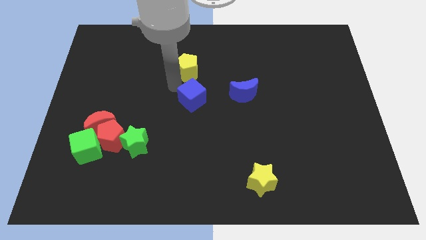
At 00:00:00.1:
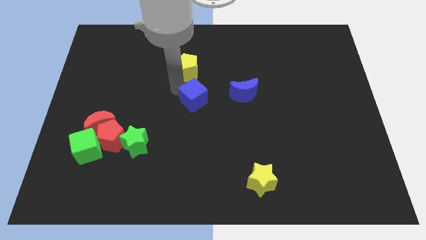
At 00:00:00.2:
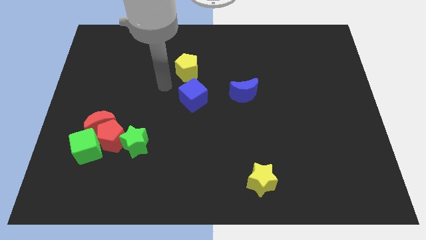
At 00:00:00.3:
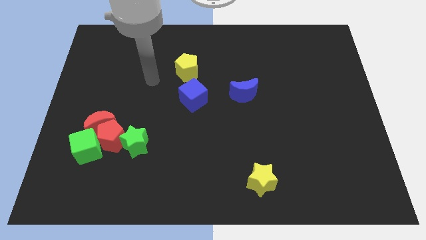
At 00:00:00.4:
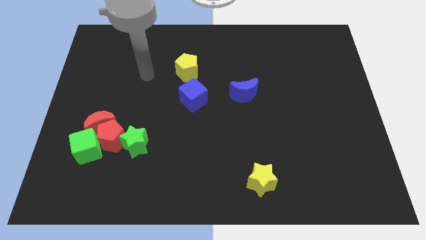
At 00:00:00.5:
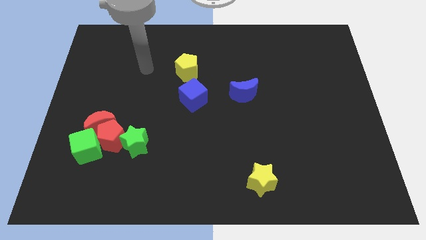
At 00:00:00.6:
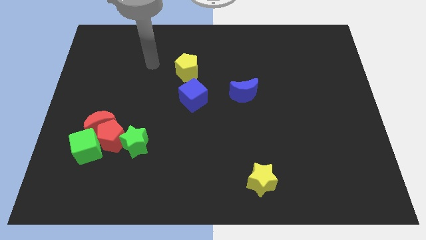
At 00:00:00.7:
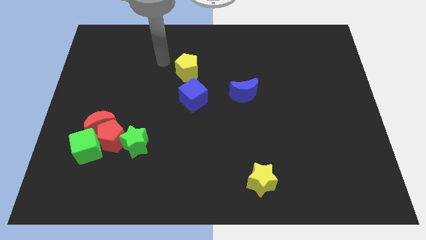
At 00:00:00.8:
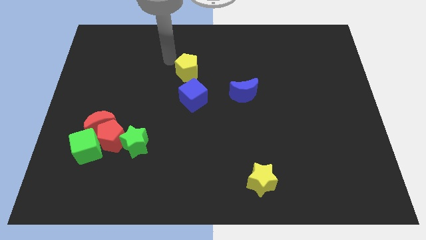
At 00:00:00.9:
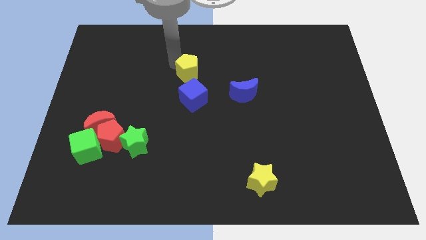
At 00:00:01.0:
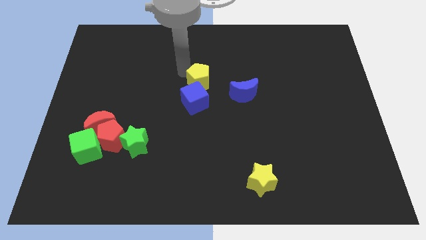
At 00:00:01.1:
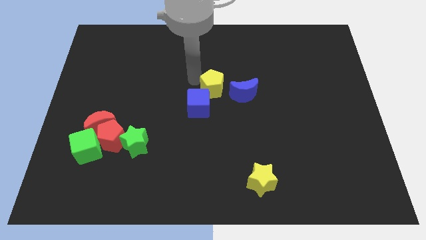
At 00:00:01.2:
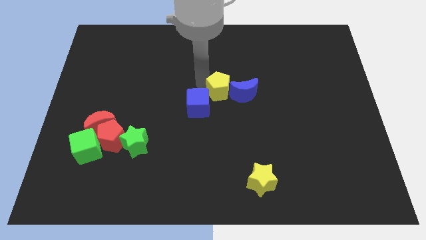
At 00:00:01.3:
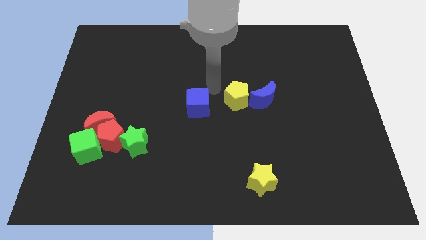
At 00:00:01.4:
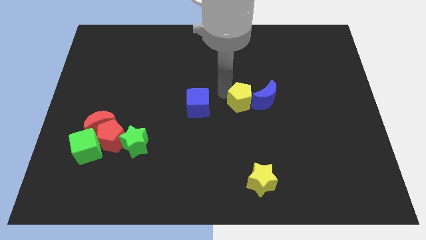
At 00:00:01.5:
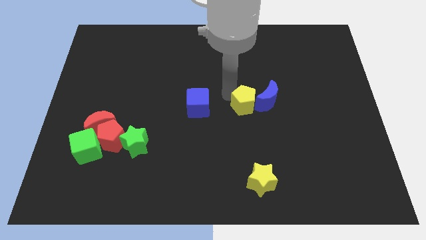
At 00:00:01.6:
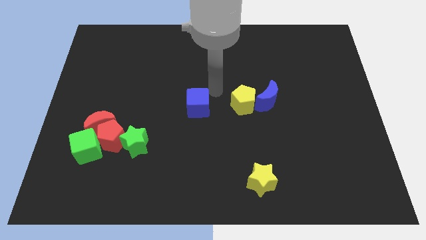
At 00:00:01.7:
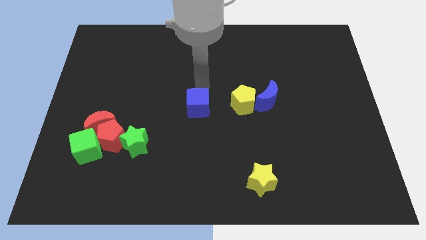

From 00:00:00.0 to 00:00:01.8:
place the yellow pentagon in between blue cube and blue crescent

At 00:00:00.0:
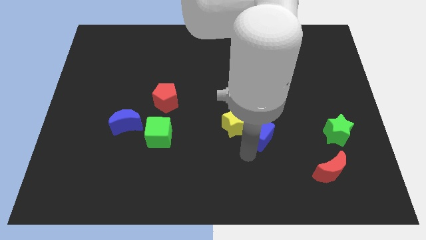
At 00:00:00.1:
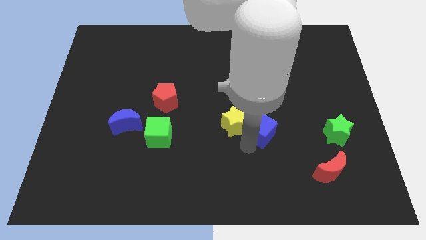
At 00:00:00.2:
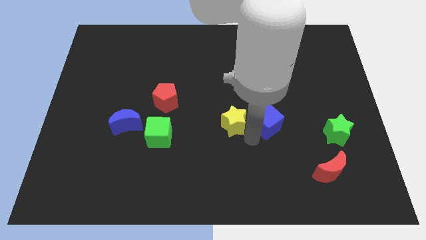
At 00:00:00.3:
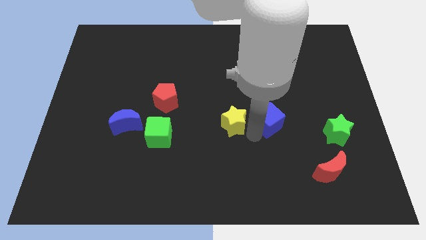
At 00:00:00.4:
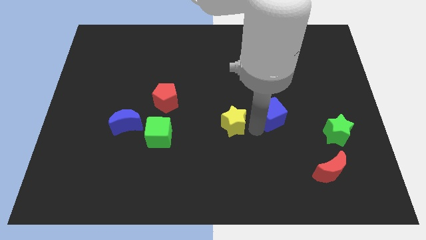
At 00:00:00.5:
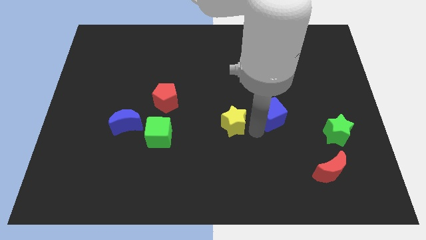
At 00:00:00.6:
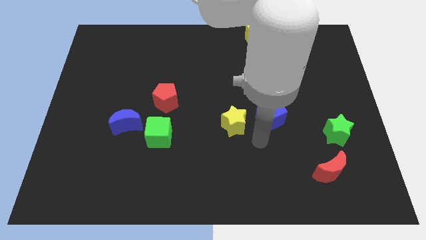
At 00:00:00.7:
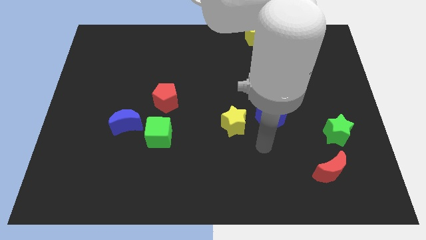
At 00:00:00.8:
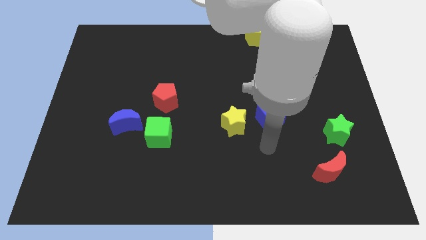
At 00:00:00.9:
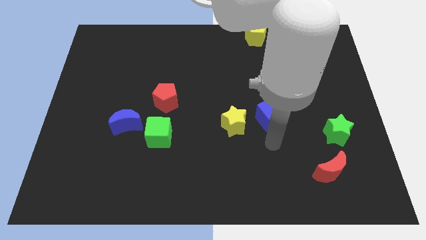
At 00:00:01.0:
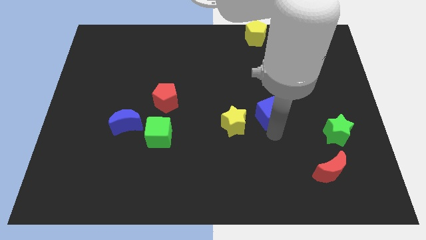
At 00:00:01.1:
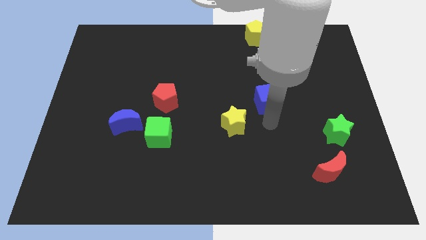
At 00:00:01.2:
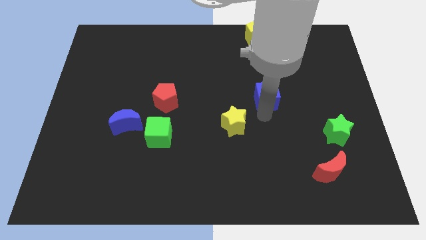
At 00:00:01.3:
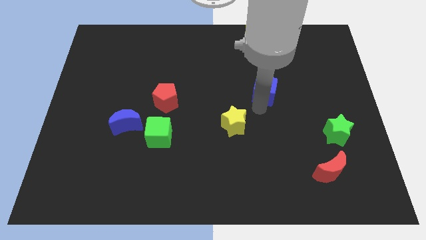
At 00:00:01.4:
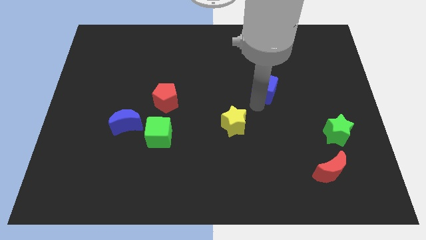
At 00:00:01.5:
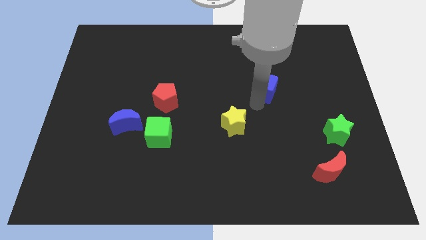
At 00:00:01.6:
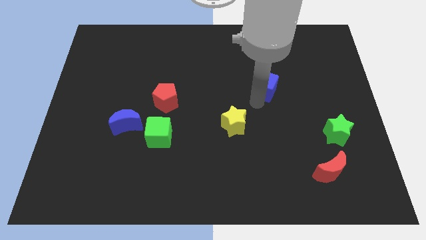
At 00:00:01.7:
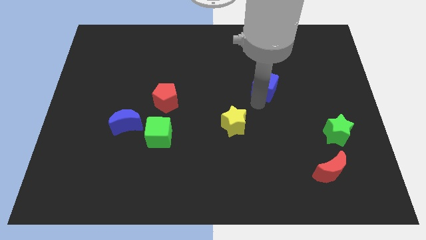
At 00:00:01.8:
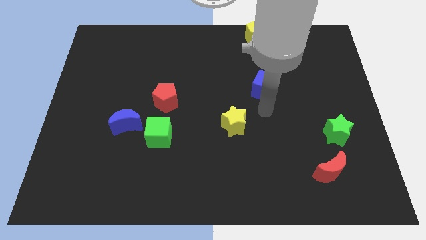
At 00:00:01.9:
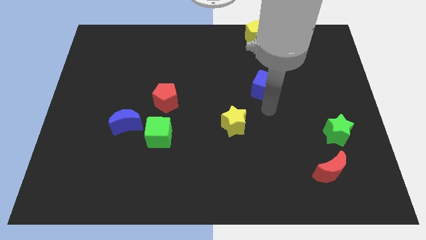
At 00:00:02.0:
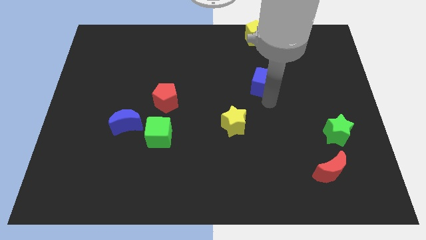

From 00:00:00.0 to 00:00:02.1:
separate blue cube from yellow star

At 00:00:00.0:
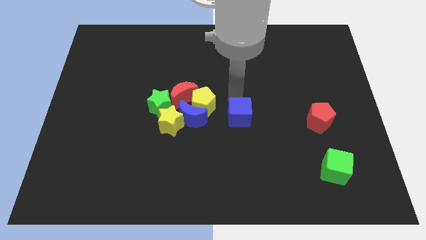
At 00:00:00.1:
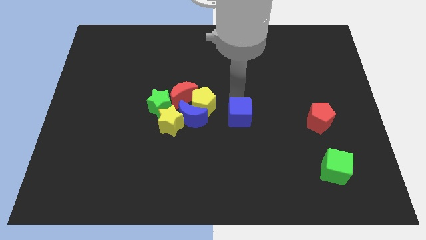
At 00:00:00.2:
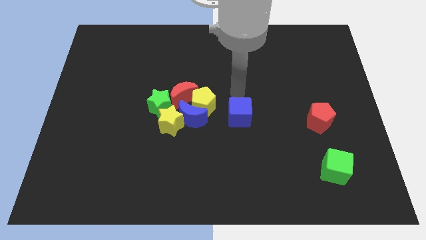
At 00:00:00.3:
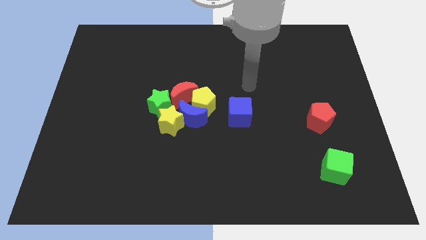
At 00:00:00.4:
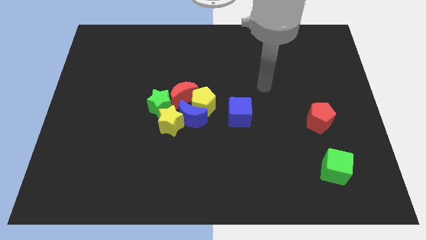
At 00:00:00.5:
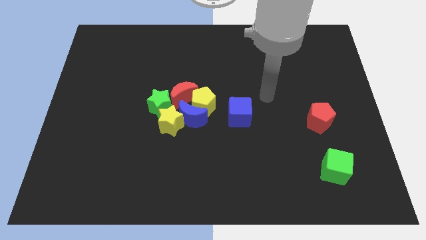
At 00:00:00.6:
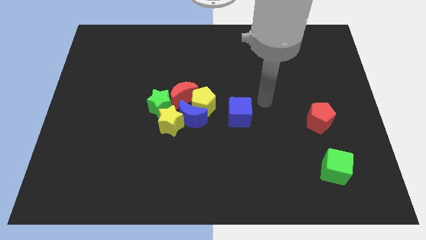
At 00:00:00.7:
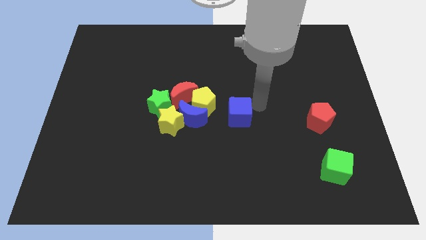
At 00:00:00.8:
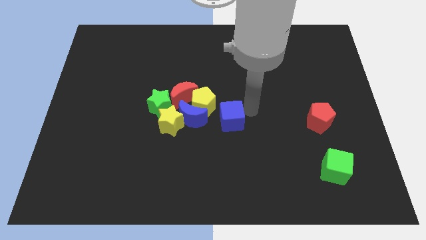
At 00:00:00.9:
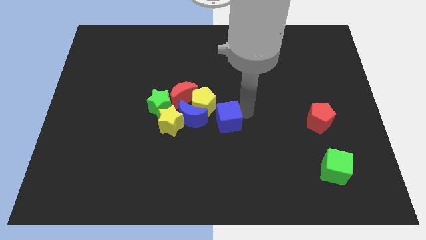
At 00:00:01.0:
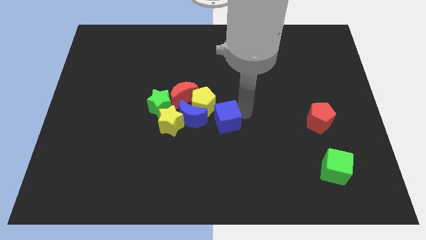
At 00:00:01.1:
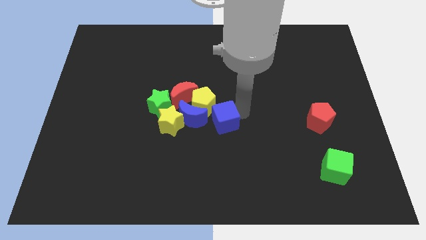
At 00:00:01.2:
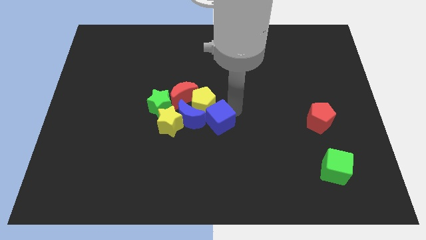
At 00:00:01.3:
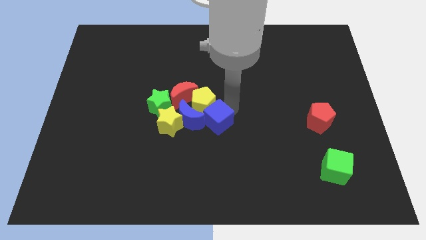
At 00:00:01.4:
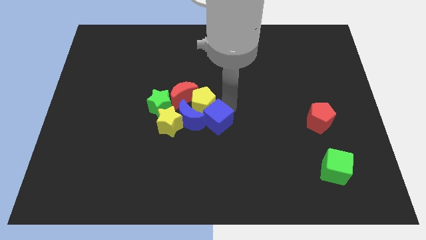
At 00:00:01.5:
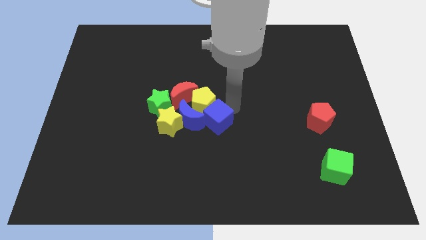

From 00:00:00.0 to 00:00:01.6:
put the blue cube on the right side of the blue crescent

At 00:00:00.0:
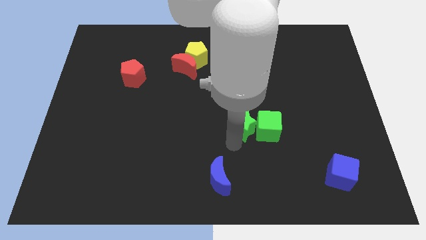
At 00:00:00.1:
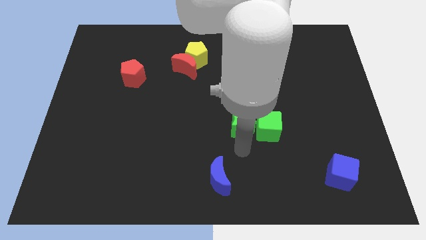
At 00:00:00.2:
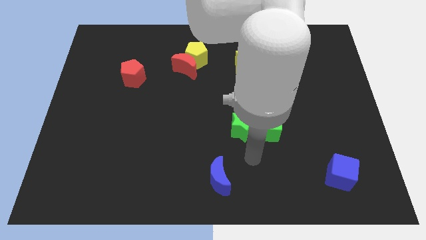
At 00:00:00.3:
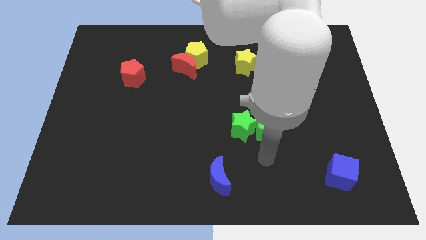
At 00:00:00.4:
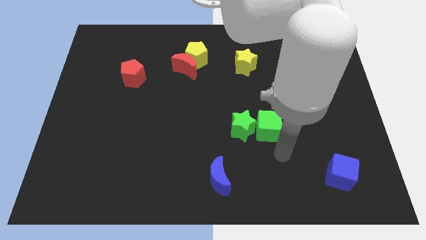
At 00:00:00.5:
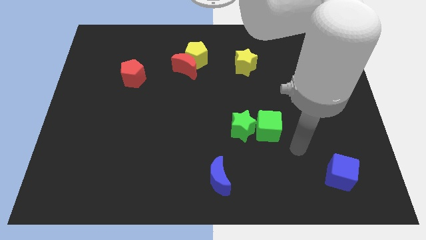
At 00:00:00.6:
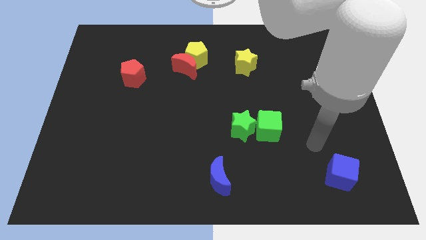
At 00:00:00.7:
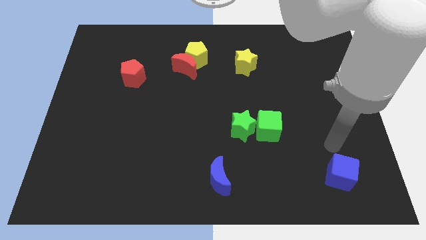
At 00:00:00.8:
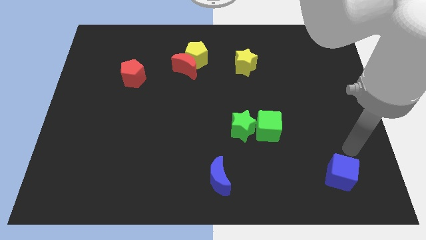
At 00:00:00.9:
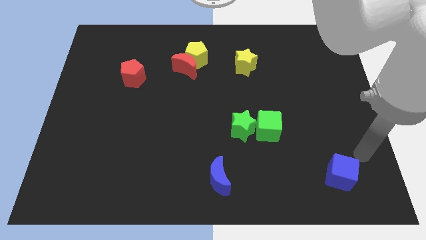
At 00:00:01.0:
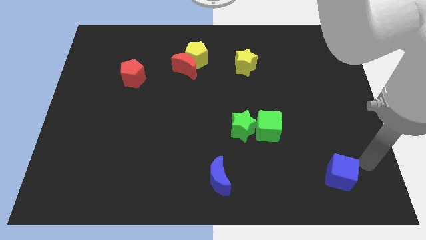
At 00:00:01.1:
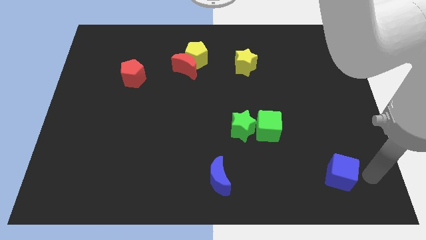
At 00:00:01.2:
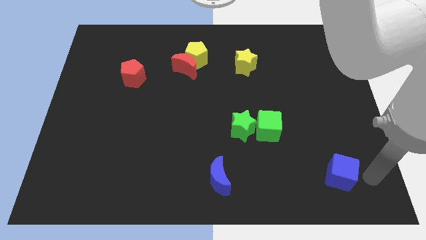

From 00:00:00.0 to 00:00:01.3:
move your arm to the right of blue cube

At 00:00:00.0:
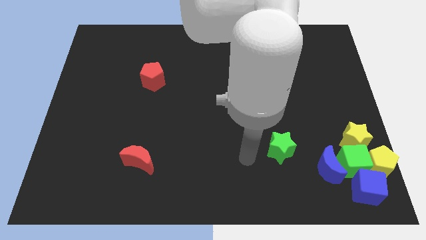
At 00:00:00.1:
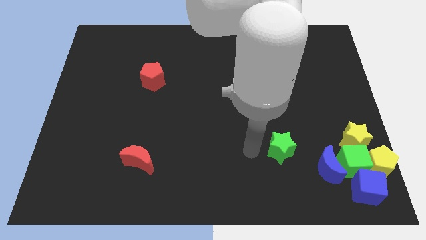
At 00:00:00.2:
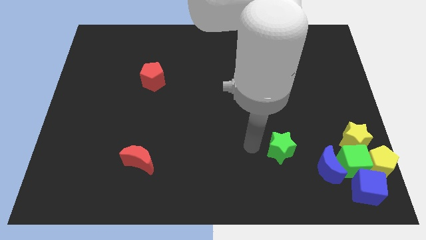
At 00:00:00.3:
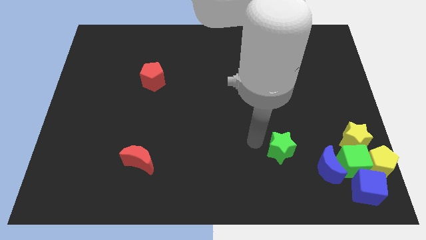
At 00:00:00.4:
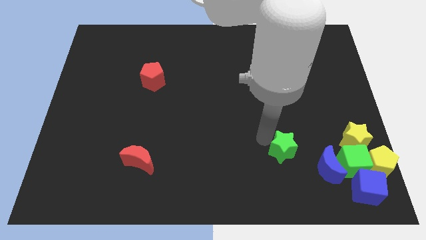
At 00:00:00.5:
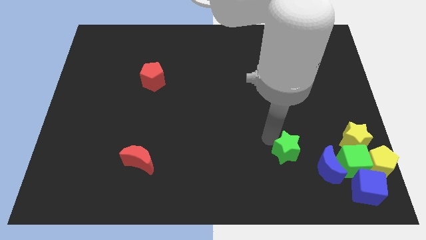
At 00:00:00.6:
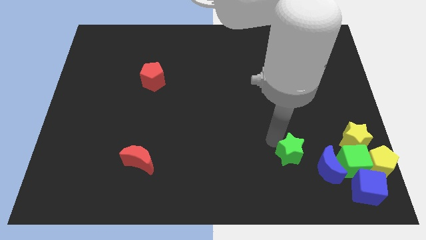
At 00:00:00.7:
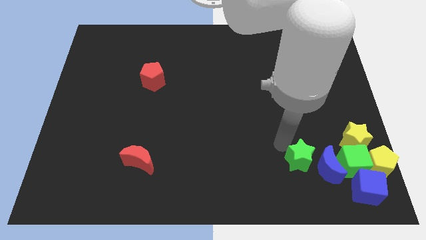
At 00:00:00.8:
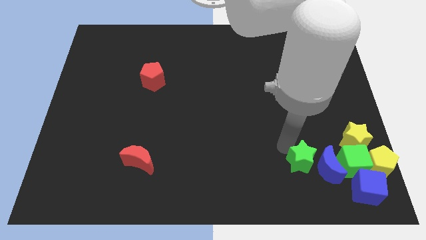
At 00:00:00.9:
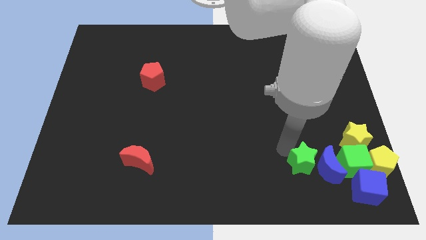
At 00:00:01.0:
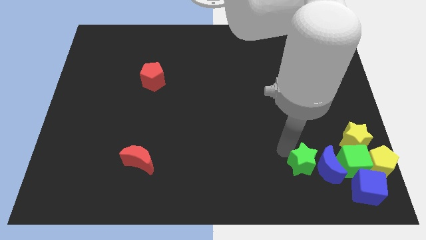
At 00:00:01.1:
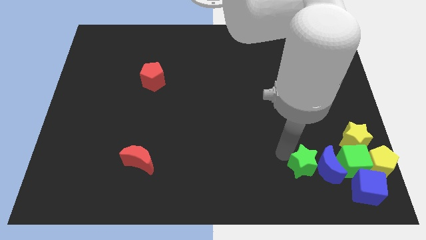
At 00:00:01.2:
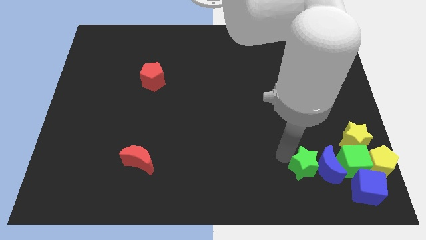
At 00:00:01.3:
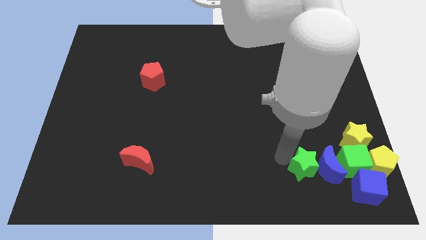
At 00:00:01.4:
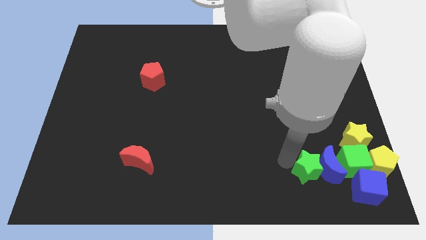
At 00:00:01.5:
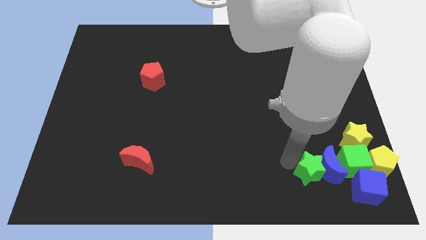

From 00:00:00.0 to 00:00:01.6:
place the green star to the left of the blue crescent

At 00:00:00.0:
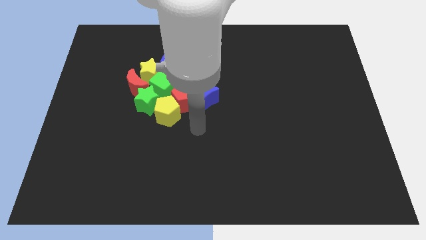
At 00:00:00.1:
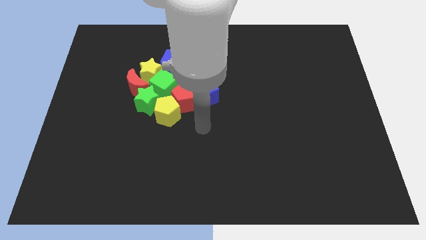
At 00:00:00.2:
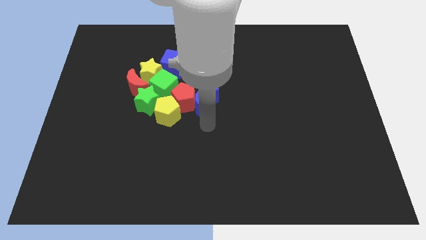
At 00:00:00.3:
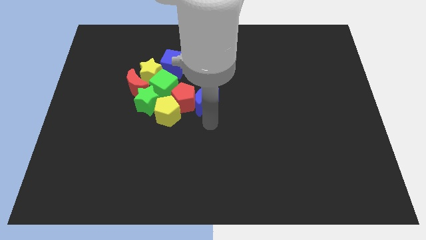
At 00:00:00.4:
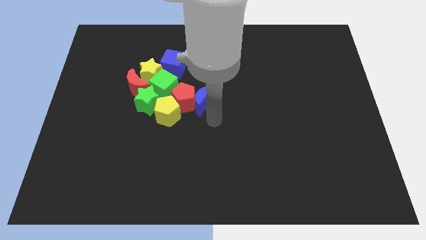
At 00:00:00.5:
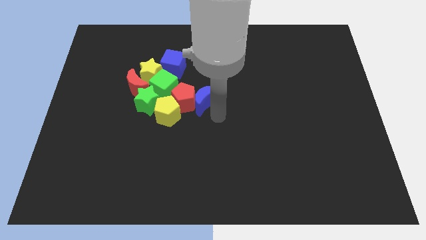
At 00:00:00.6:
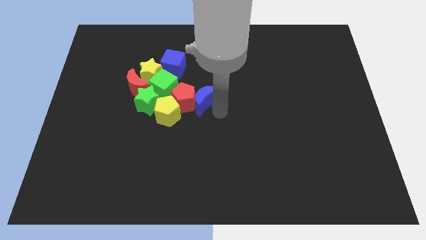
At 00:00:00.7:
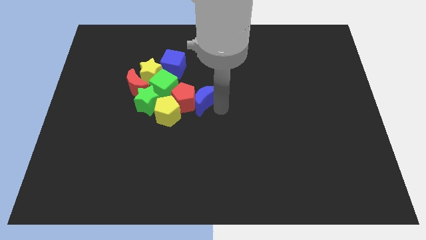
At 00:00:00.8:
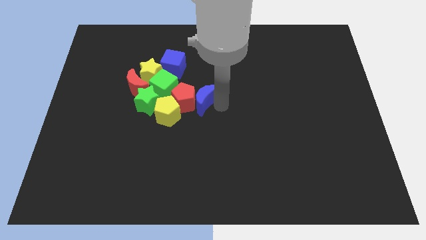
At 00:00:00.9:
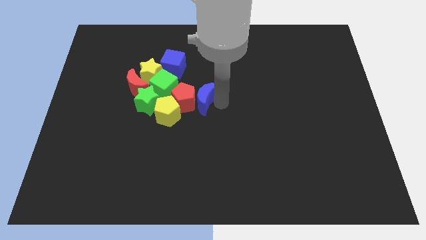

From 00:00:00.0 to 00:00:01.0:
slightly push the blue crescent on the board
